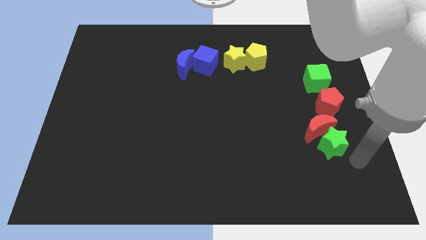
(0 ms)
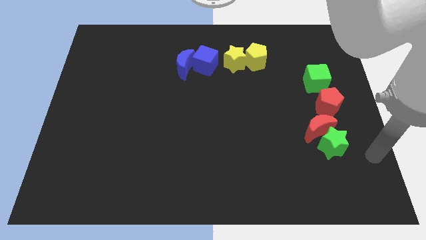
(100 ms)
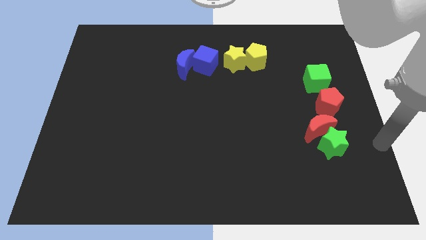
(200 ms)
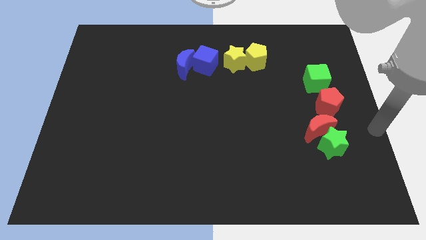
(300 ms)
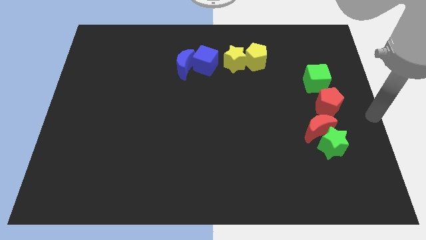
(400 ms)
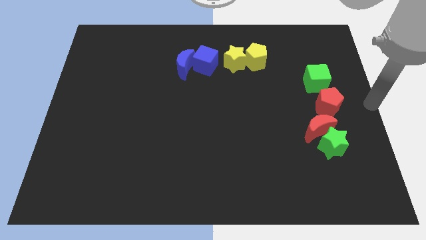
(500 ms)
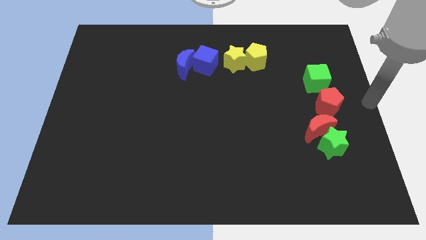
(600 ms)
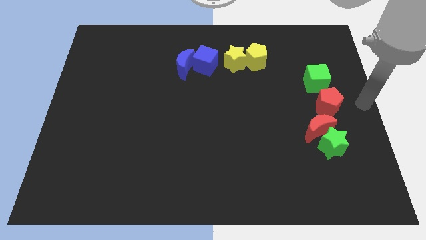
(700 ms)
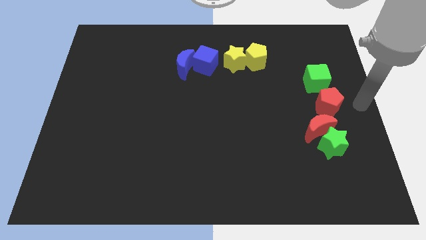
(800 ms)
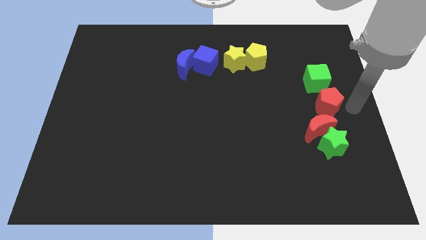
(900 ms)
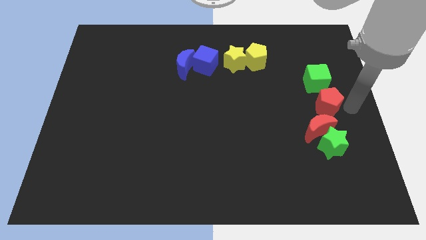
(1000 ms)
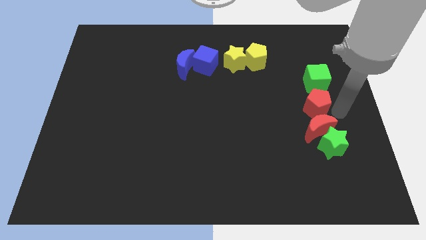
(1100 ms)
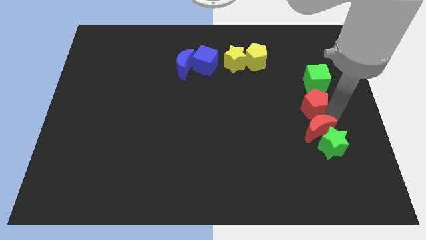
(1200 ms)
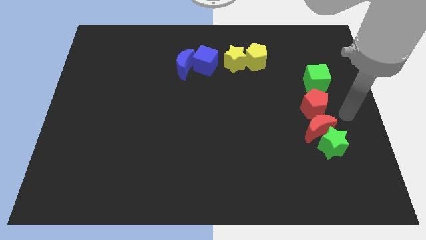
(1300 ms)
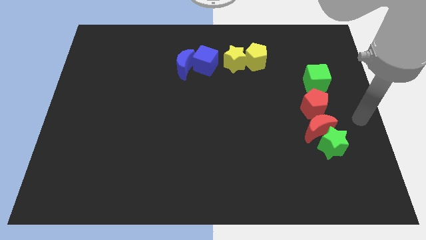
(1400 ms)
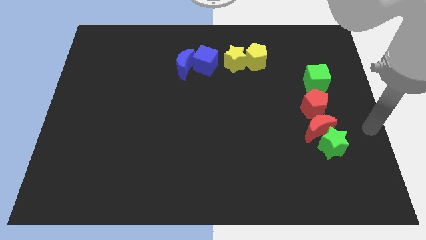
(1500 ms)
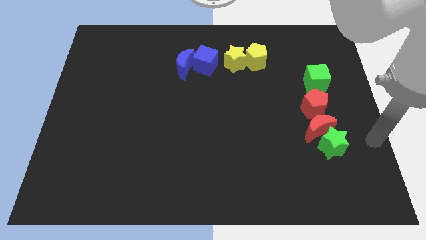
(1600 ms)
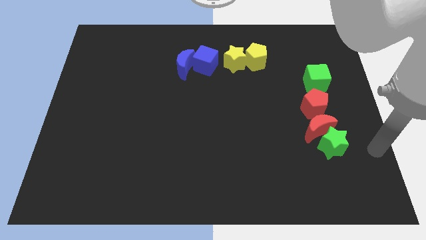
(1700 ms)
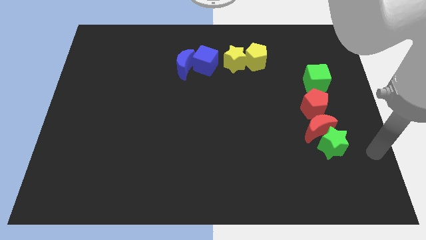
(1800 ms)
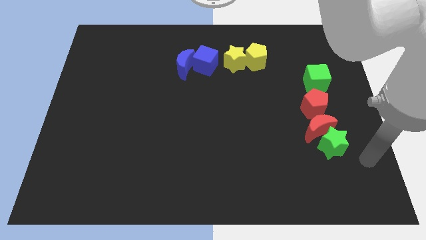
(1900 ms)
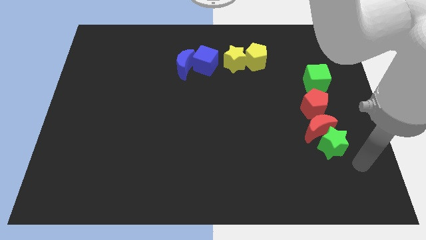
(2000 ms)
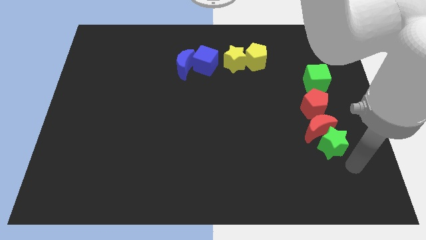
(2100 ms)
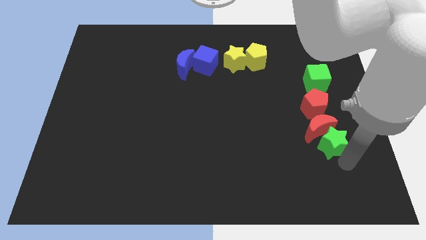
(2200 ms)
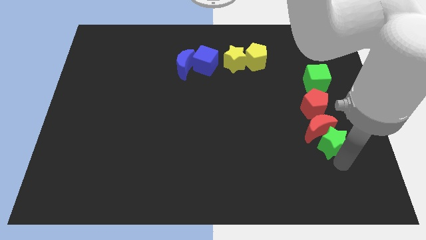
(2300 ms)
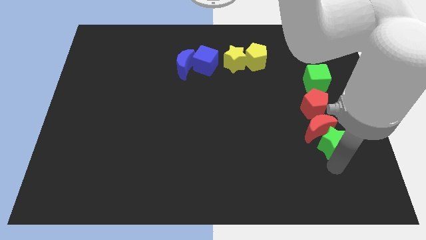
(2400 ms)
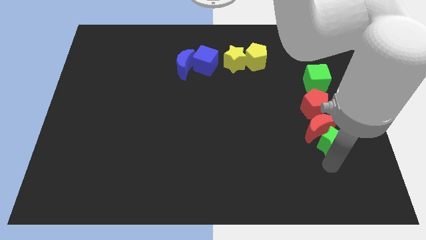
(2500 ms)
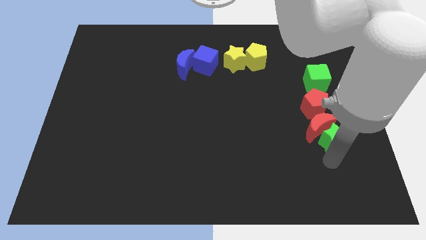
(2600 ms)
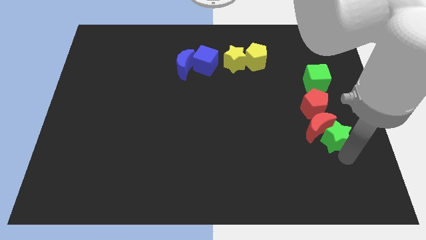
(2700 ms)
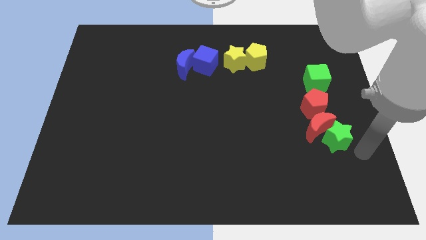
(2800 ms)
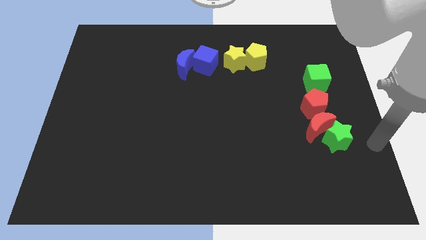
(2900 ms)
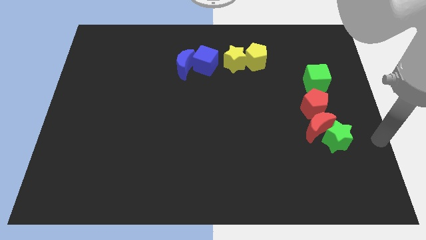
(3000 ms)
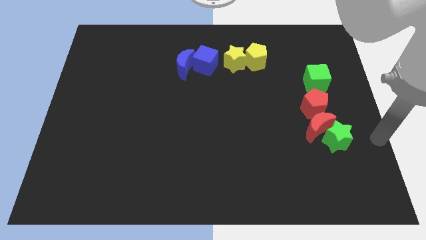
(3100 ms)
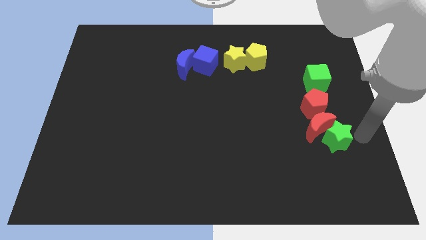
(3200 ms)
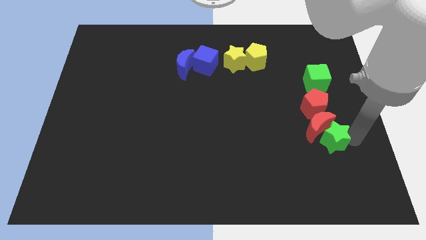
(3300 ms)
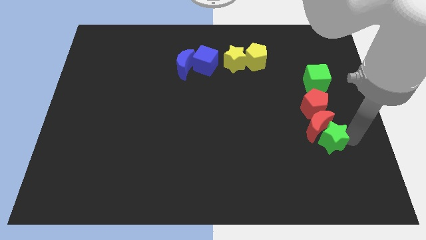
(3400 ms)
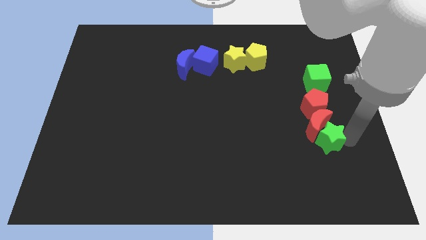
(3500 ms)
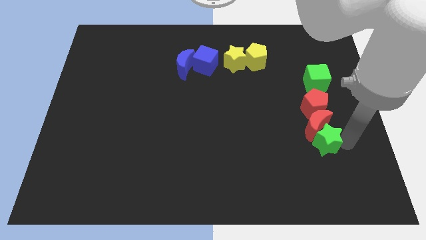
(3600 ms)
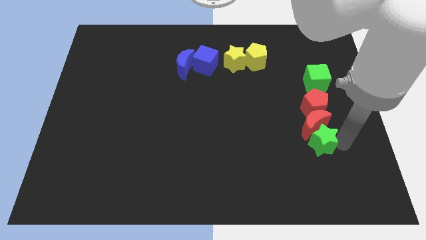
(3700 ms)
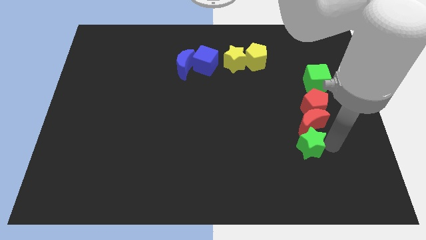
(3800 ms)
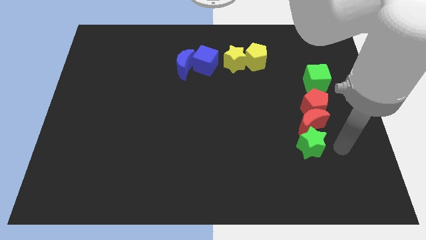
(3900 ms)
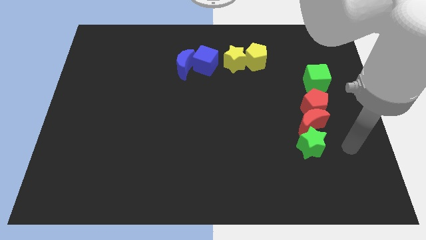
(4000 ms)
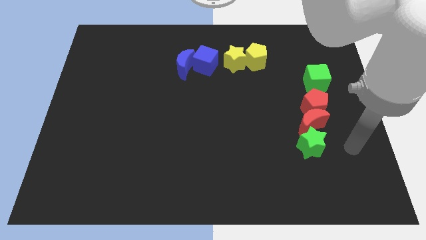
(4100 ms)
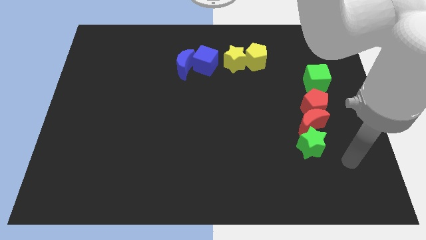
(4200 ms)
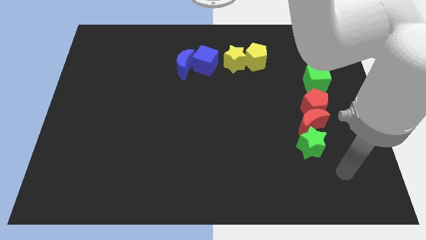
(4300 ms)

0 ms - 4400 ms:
make a line out of green and red blocks

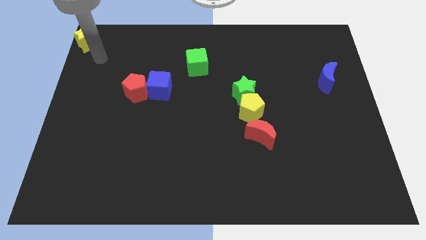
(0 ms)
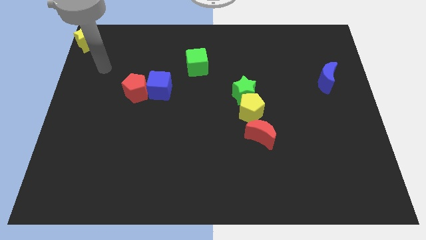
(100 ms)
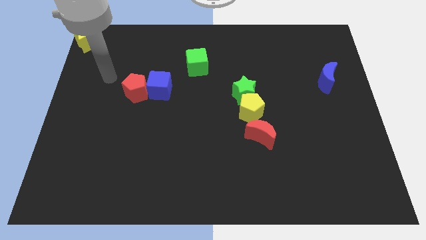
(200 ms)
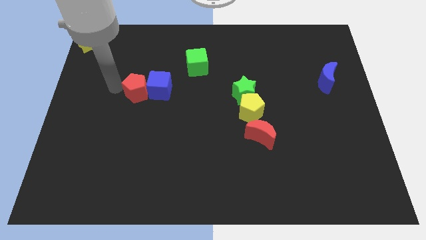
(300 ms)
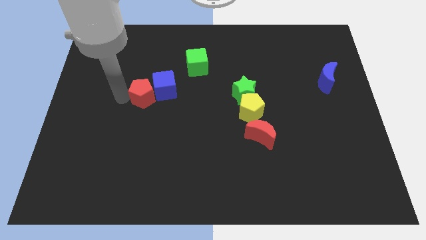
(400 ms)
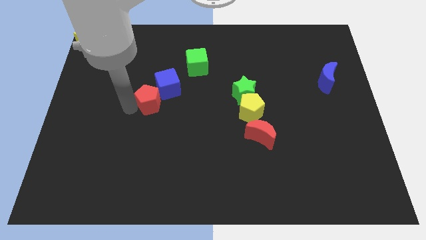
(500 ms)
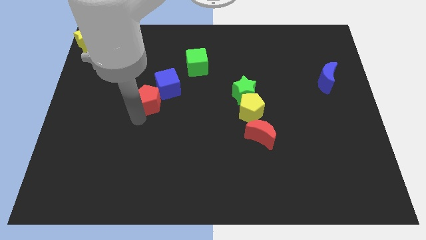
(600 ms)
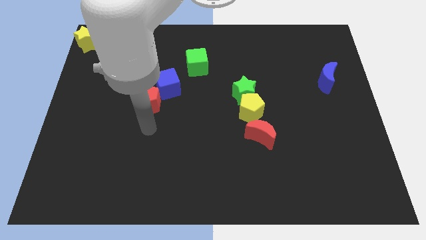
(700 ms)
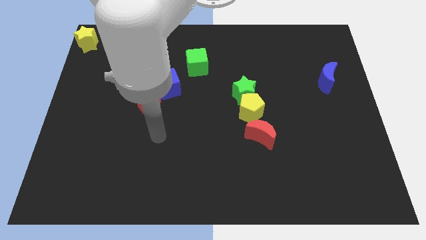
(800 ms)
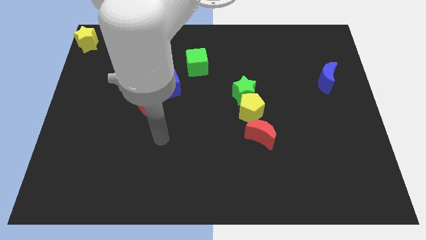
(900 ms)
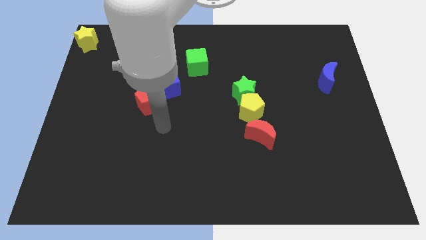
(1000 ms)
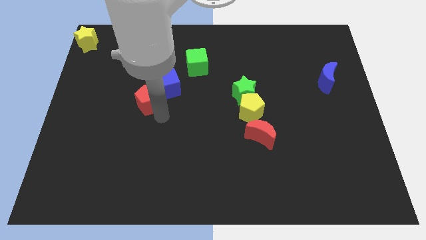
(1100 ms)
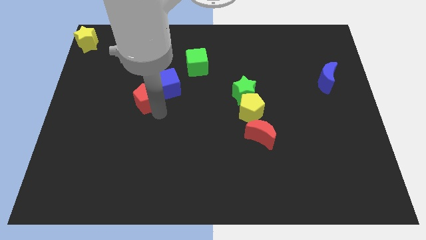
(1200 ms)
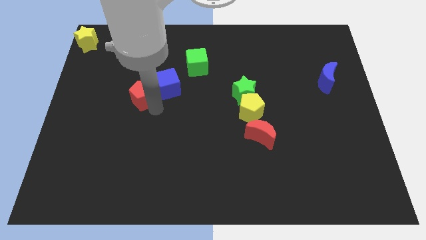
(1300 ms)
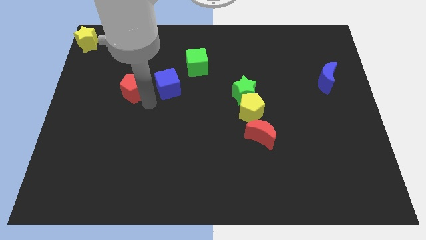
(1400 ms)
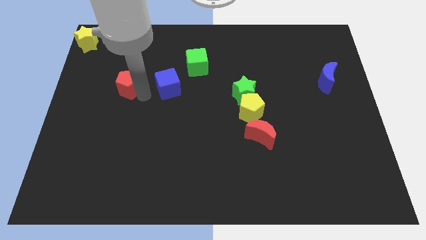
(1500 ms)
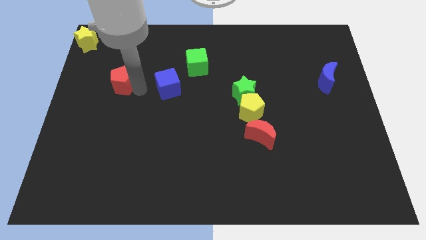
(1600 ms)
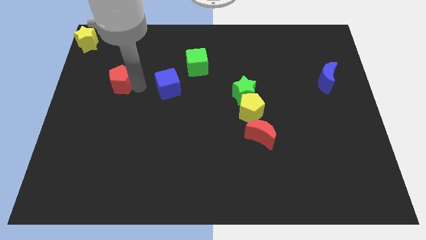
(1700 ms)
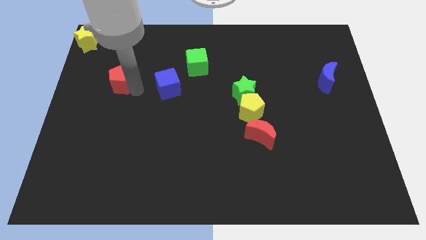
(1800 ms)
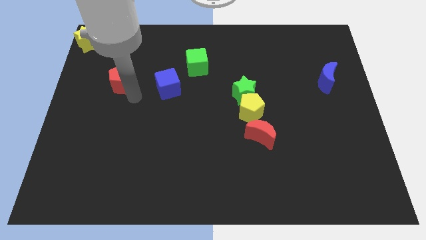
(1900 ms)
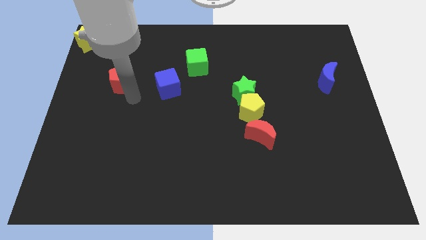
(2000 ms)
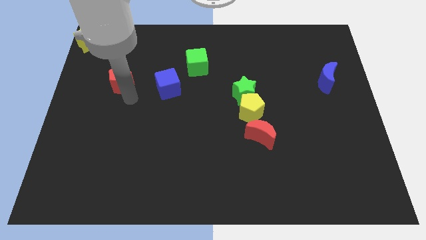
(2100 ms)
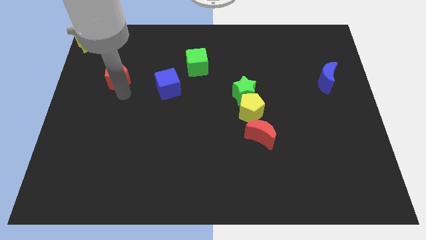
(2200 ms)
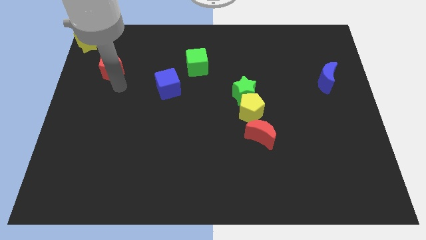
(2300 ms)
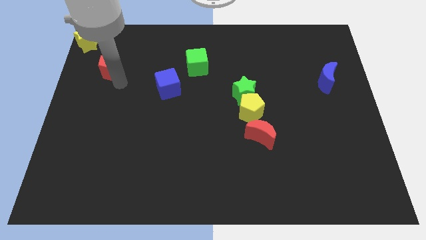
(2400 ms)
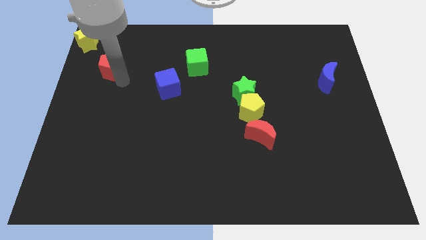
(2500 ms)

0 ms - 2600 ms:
move the red pentagon to the top right of the blue cube

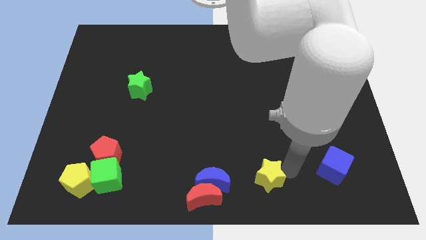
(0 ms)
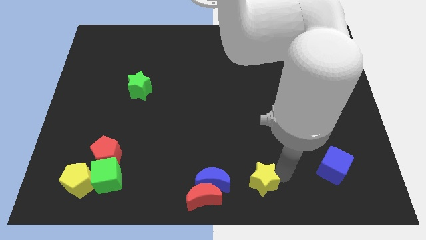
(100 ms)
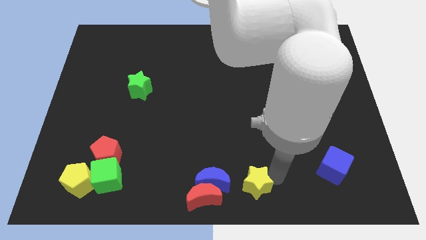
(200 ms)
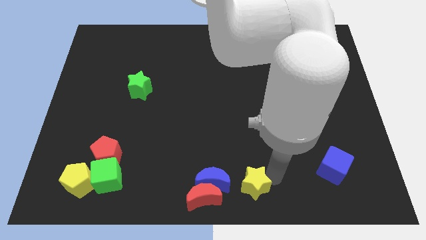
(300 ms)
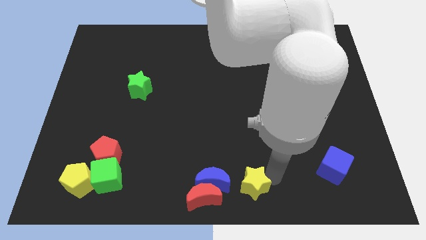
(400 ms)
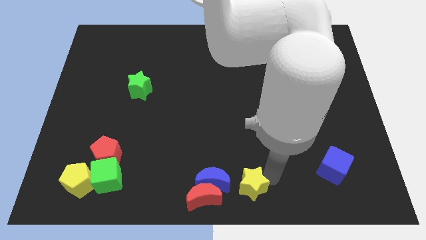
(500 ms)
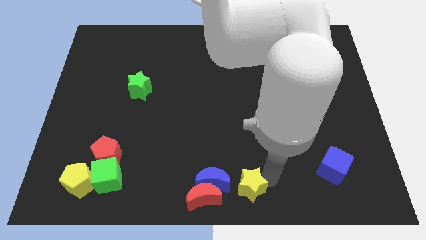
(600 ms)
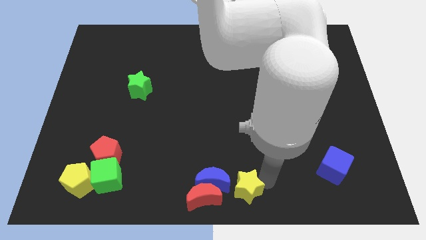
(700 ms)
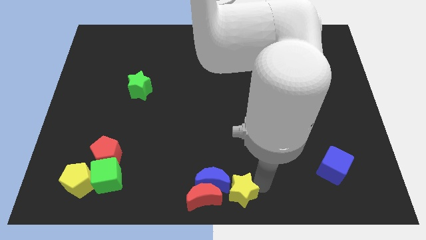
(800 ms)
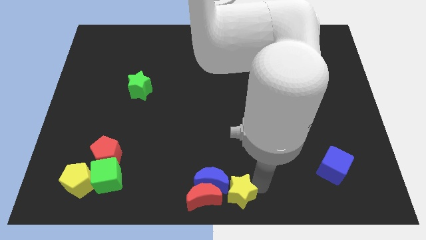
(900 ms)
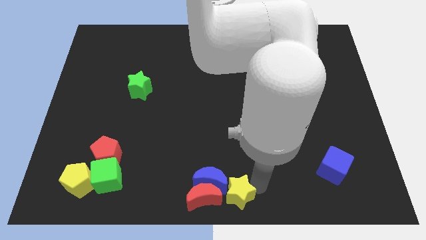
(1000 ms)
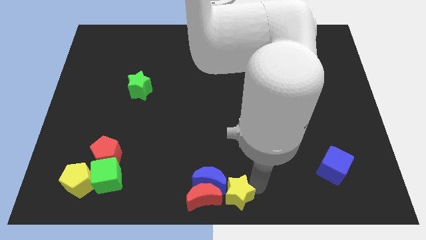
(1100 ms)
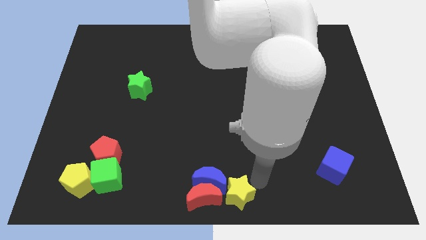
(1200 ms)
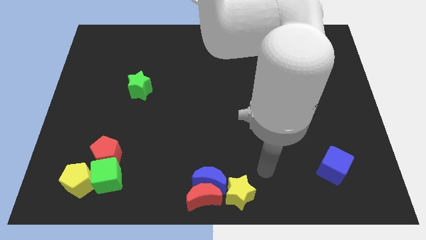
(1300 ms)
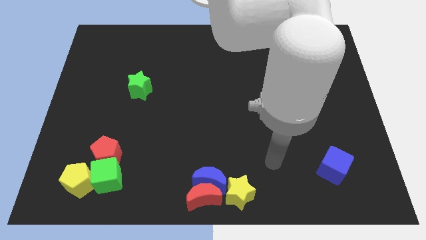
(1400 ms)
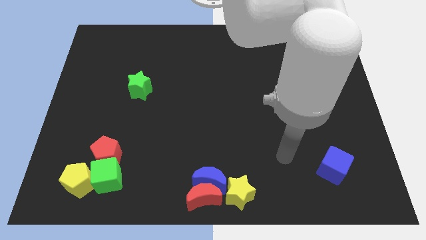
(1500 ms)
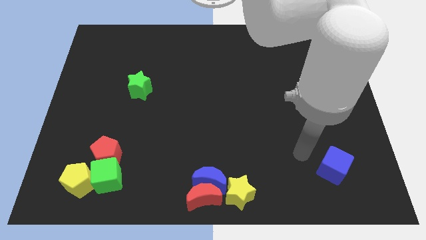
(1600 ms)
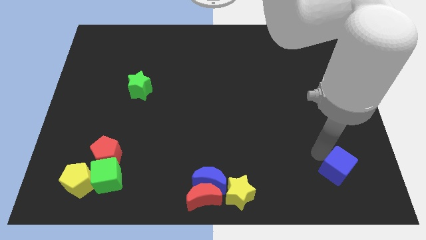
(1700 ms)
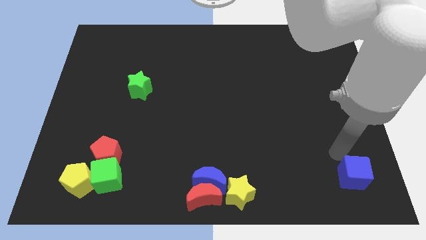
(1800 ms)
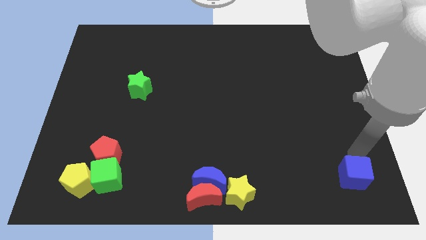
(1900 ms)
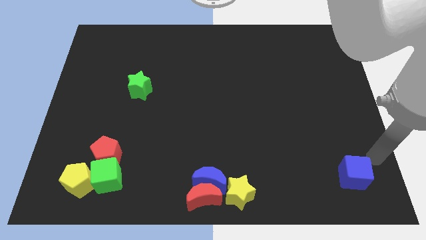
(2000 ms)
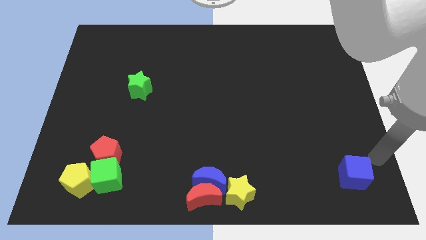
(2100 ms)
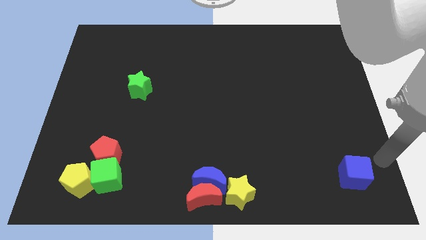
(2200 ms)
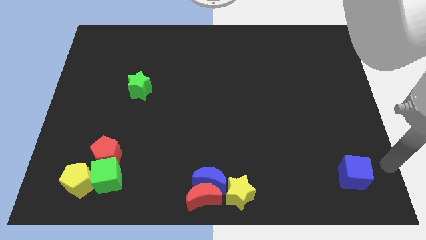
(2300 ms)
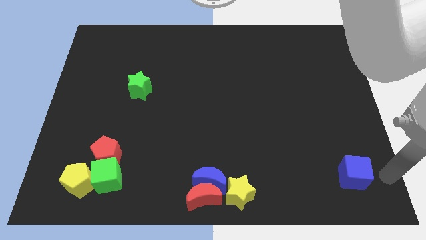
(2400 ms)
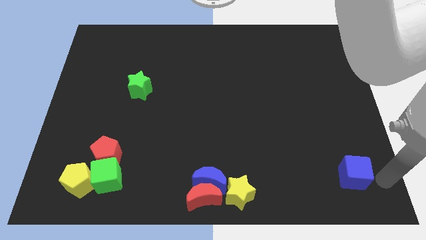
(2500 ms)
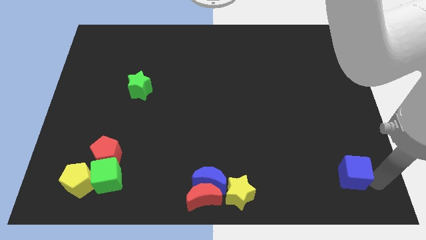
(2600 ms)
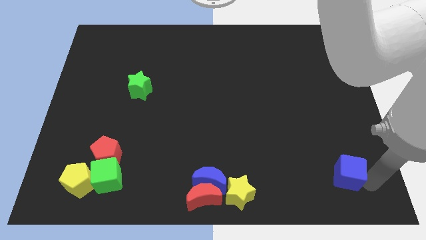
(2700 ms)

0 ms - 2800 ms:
slide the yellow star into the blue moon and red moon
